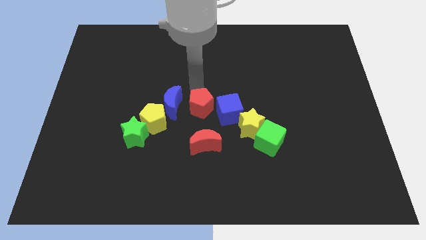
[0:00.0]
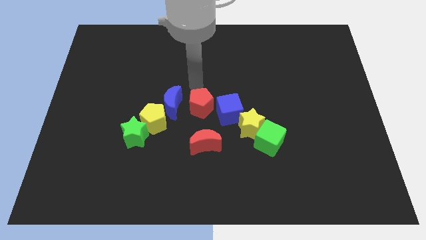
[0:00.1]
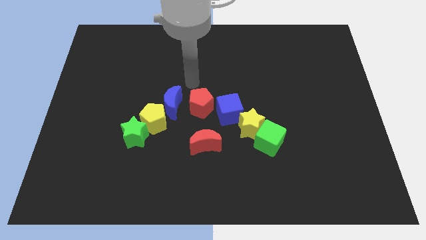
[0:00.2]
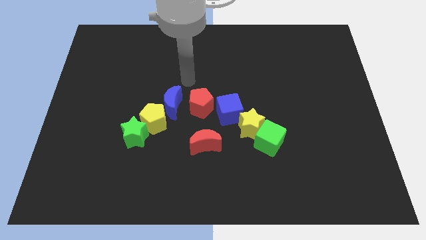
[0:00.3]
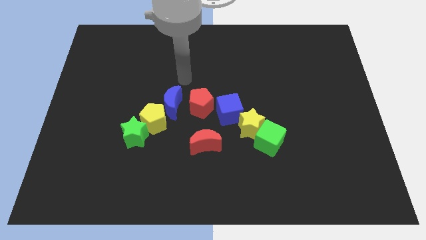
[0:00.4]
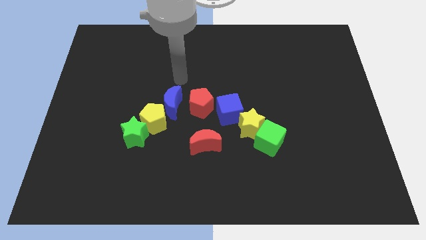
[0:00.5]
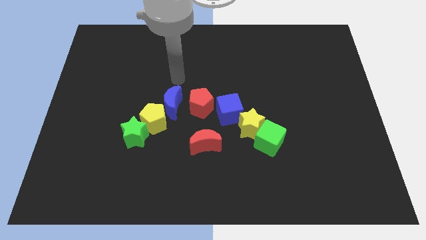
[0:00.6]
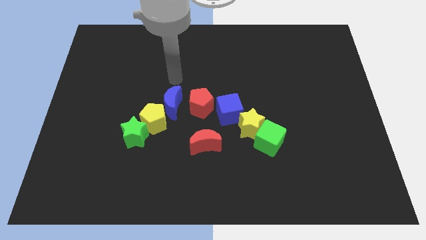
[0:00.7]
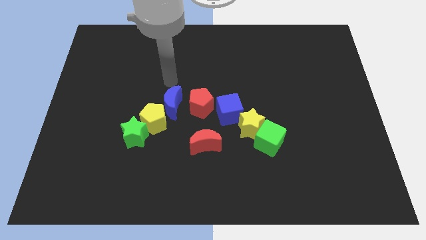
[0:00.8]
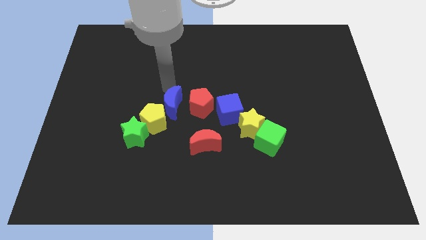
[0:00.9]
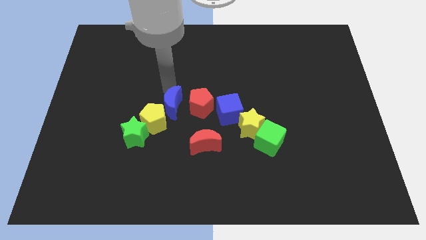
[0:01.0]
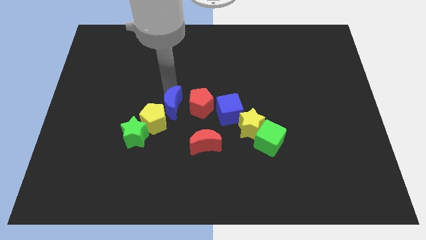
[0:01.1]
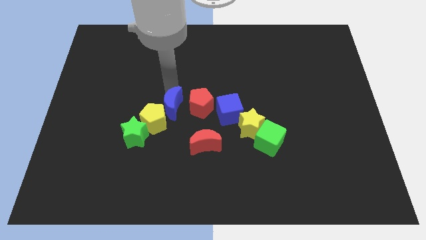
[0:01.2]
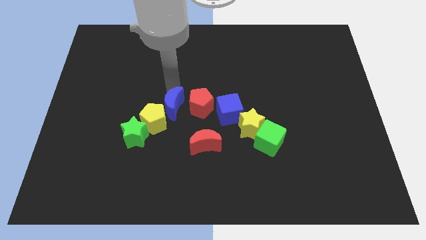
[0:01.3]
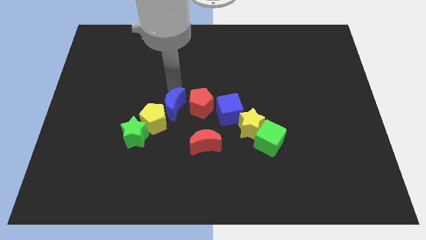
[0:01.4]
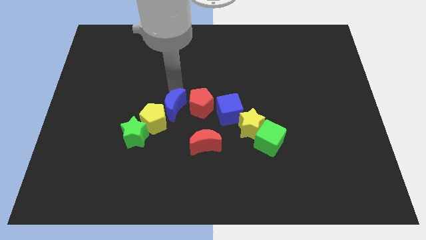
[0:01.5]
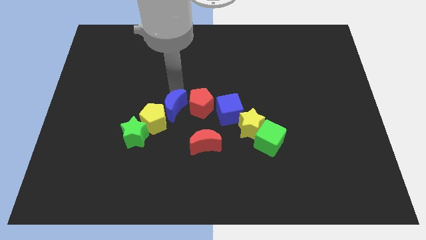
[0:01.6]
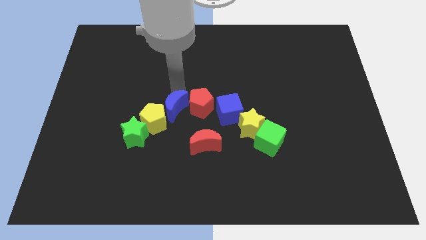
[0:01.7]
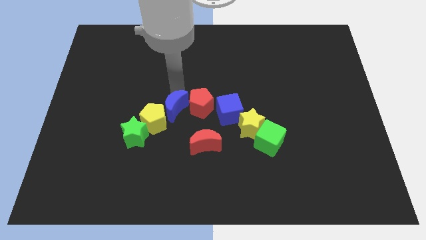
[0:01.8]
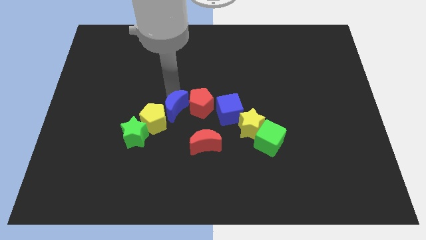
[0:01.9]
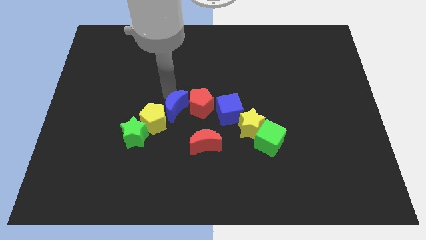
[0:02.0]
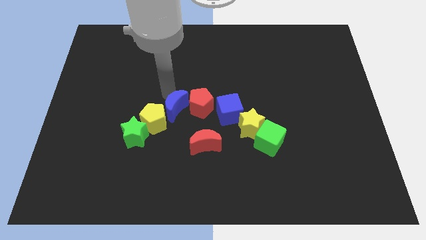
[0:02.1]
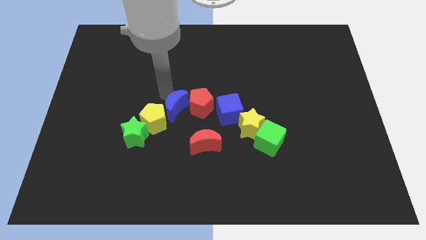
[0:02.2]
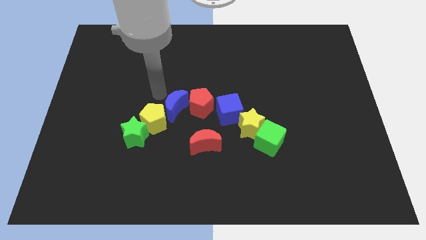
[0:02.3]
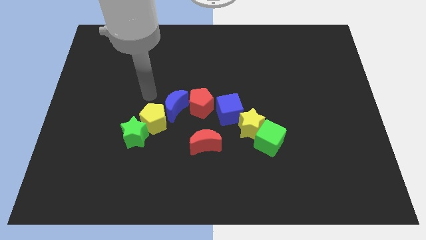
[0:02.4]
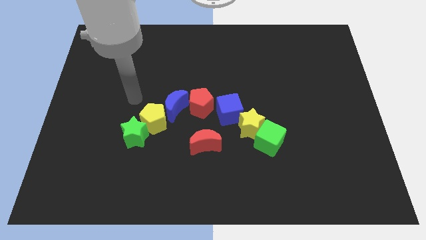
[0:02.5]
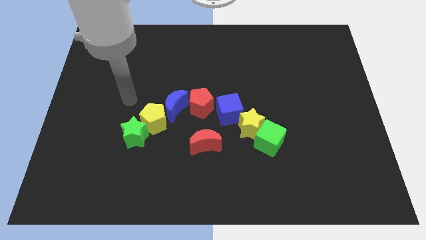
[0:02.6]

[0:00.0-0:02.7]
tap the blue crescent

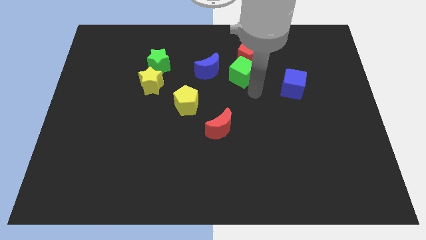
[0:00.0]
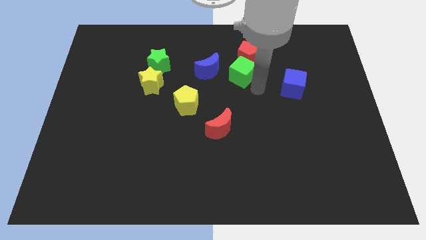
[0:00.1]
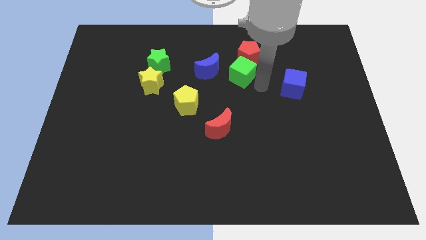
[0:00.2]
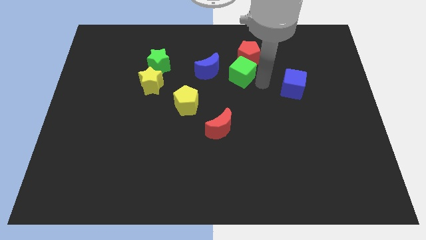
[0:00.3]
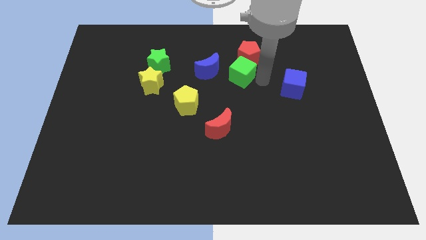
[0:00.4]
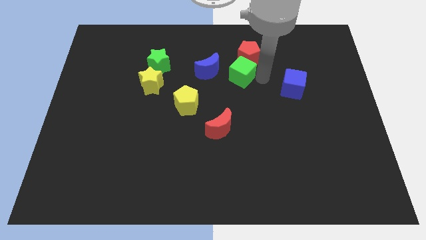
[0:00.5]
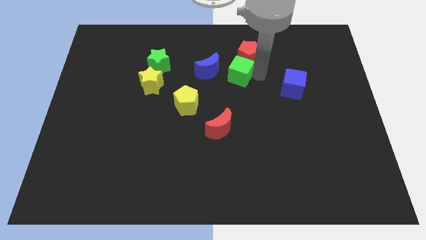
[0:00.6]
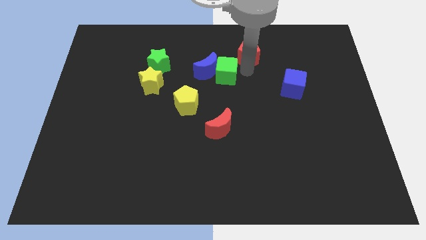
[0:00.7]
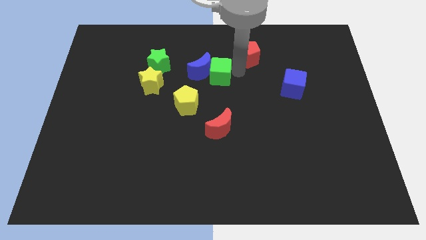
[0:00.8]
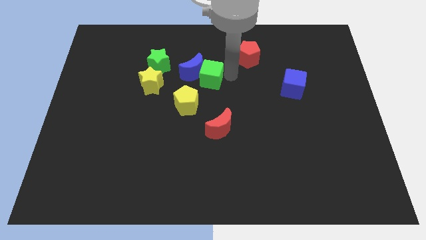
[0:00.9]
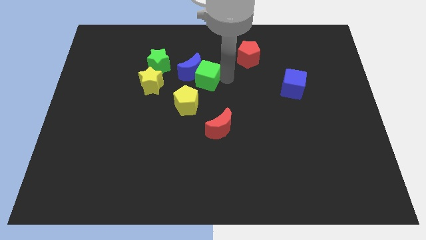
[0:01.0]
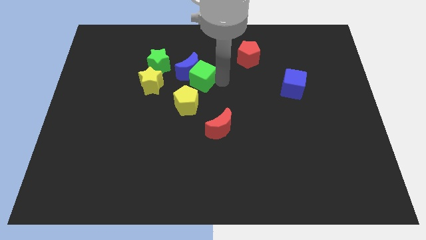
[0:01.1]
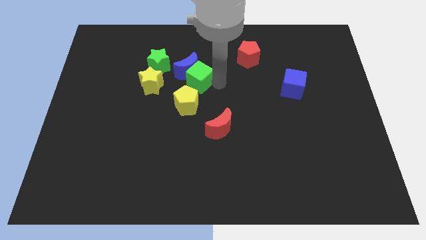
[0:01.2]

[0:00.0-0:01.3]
separate green cube from red pentagon

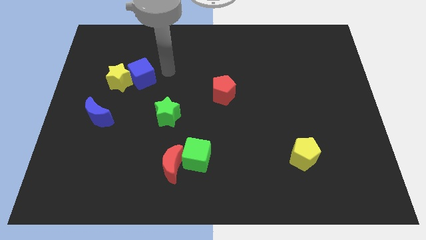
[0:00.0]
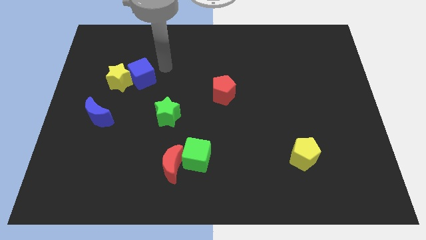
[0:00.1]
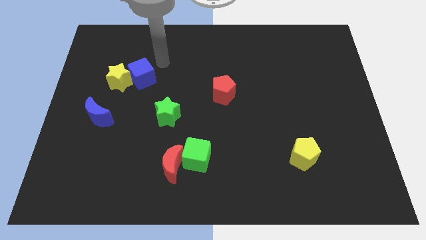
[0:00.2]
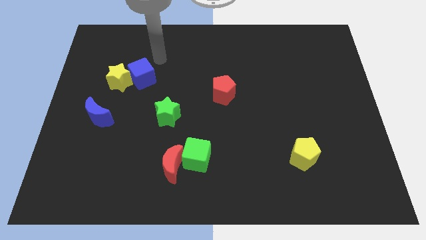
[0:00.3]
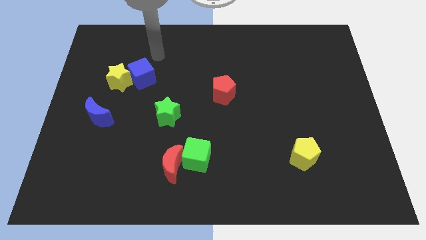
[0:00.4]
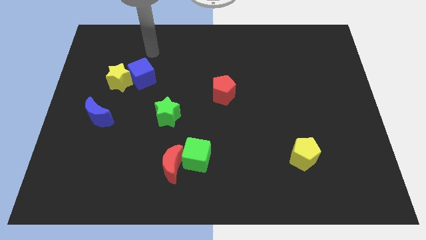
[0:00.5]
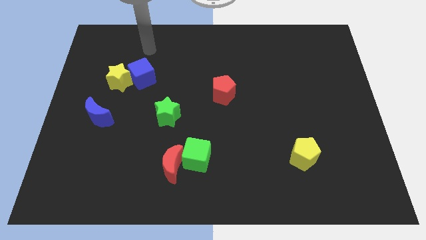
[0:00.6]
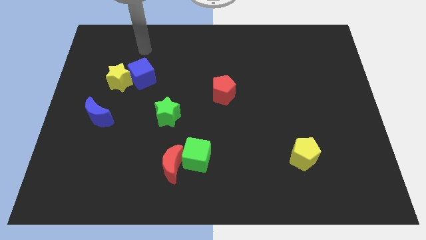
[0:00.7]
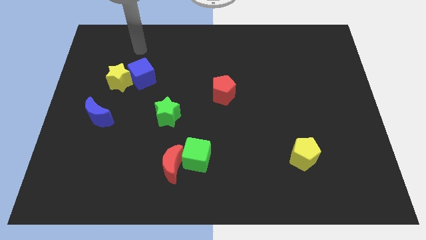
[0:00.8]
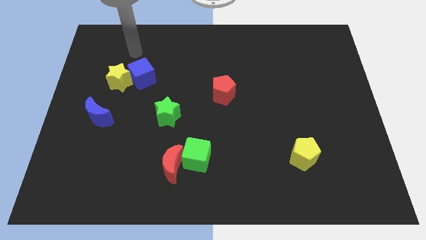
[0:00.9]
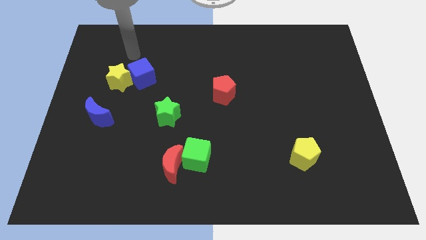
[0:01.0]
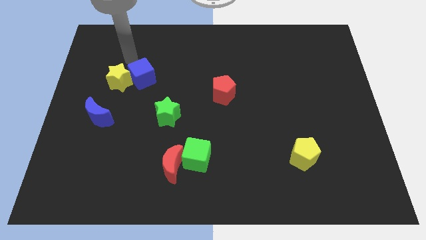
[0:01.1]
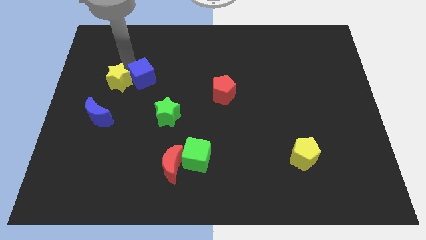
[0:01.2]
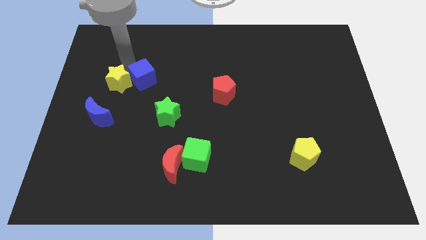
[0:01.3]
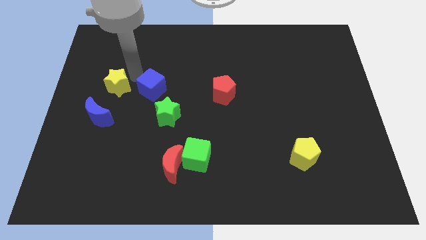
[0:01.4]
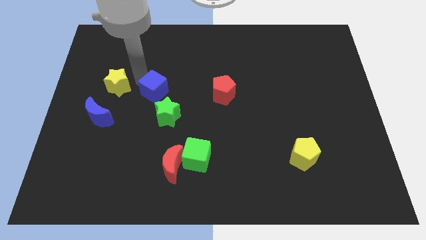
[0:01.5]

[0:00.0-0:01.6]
push the blue cube towards the green star

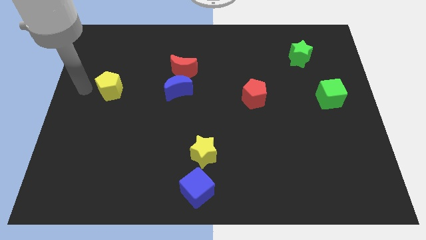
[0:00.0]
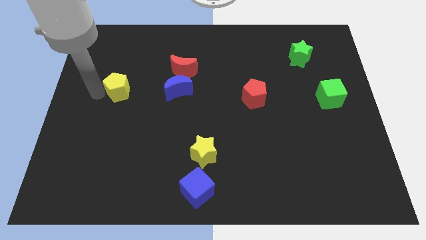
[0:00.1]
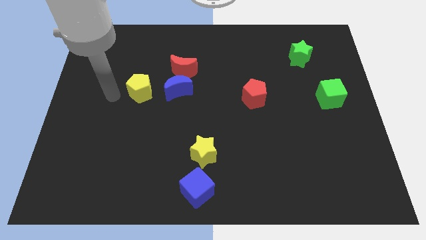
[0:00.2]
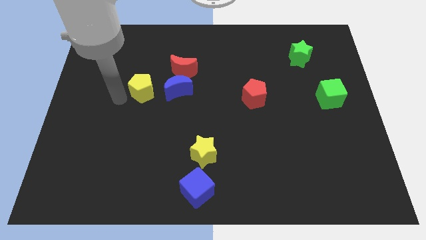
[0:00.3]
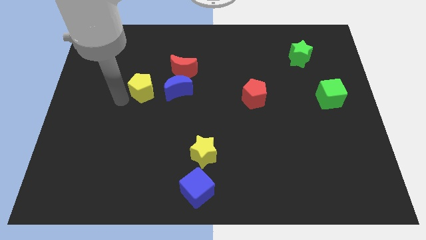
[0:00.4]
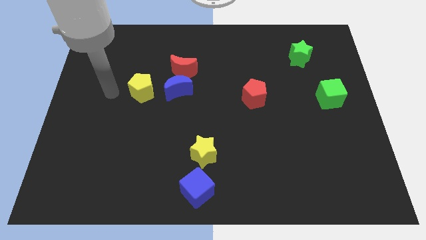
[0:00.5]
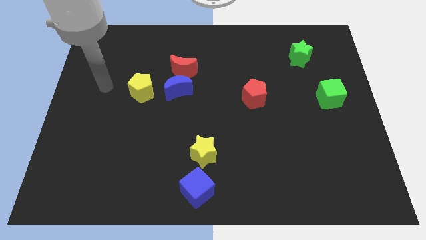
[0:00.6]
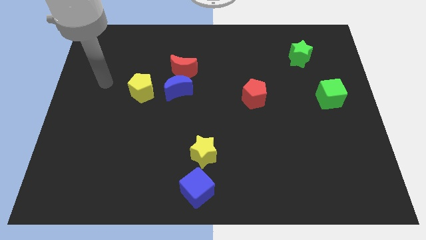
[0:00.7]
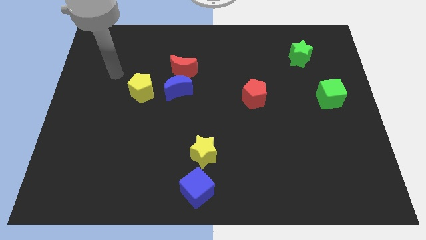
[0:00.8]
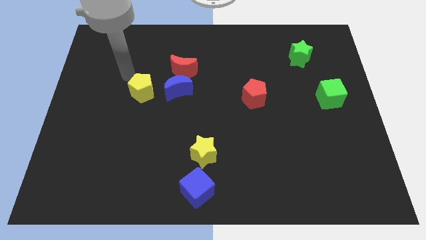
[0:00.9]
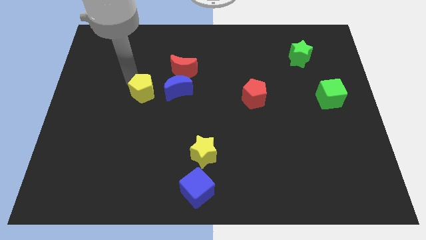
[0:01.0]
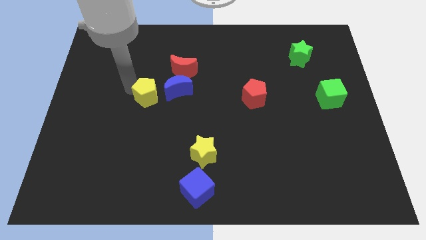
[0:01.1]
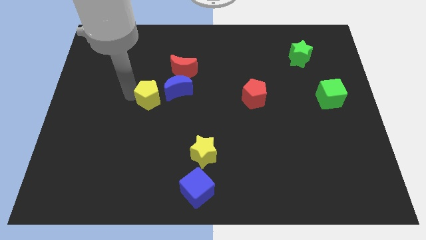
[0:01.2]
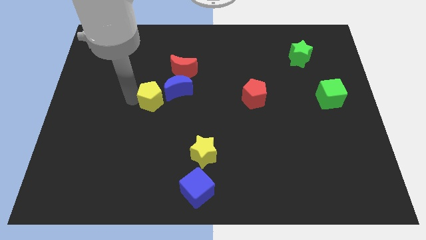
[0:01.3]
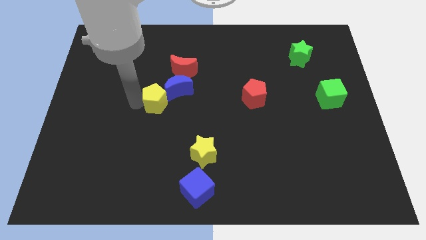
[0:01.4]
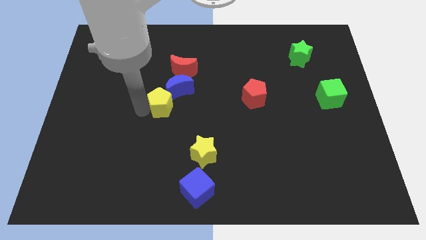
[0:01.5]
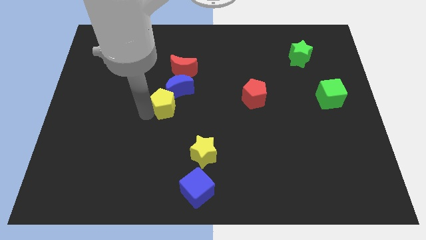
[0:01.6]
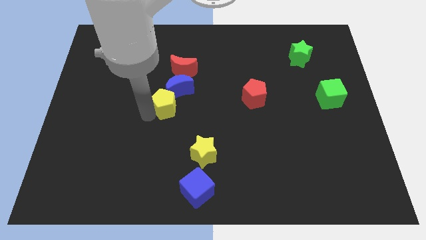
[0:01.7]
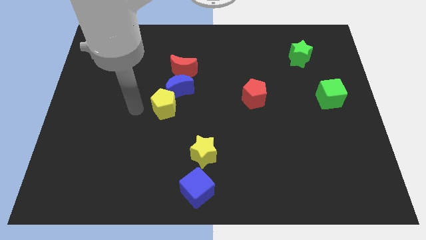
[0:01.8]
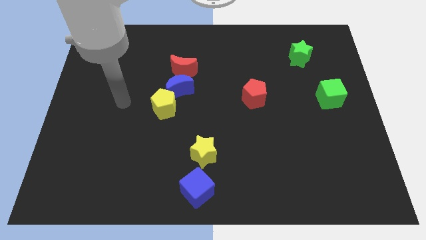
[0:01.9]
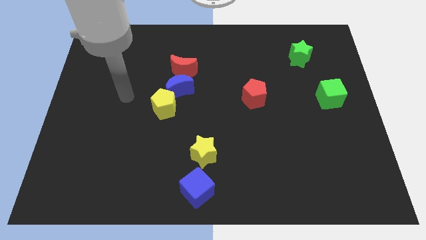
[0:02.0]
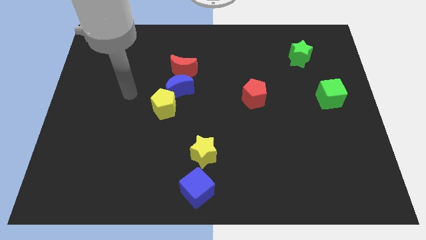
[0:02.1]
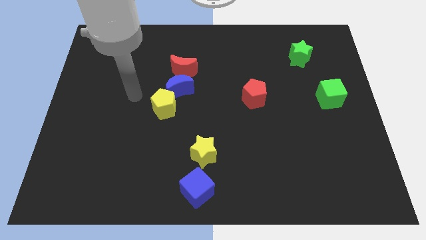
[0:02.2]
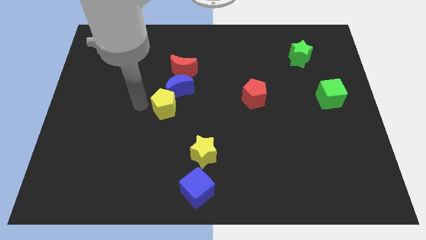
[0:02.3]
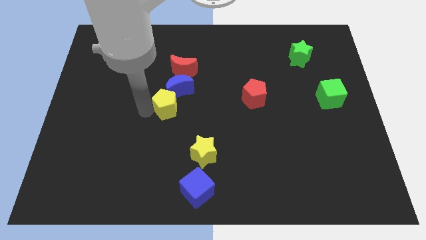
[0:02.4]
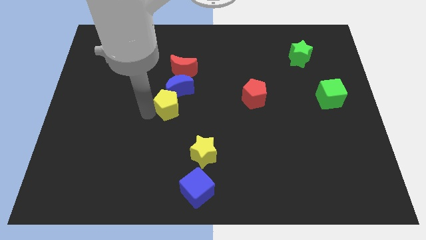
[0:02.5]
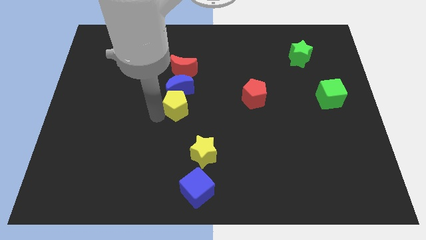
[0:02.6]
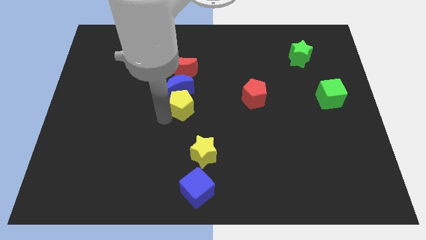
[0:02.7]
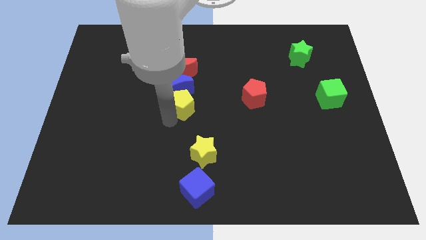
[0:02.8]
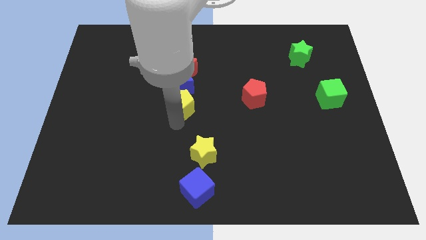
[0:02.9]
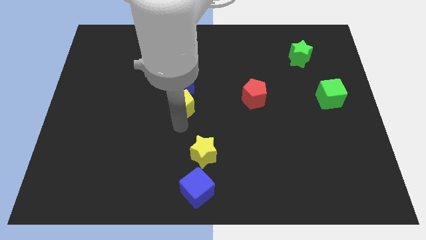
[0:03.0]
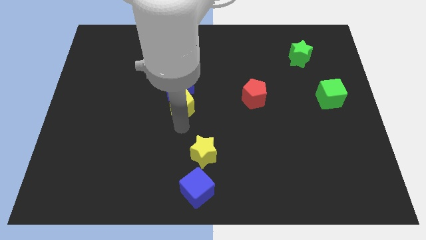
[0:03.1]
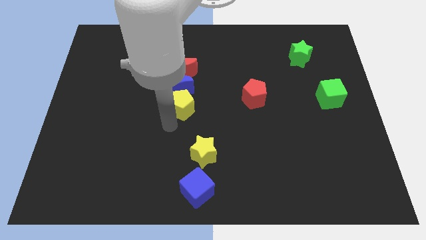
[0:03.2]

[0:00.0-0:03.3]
place the yellow pentagon vertically below the blue moon
